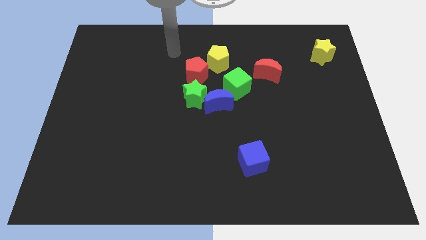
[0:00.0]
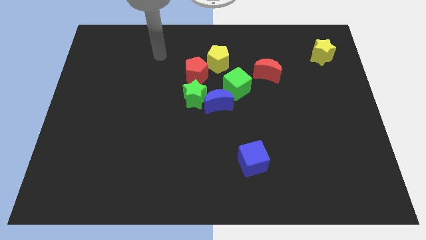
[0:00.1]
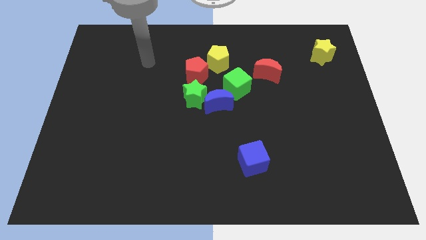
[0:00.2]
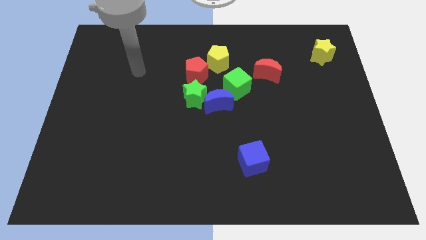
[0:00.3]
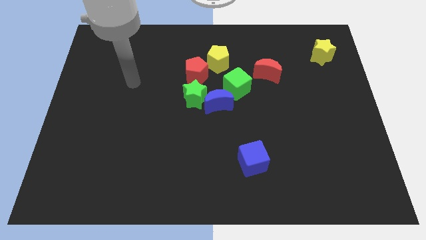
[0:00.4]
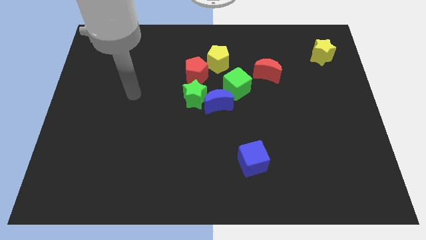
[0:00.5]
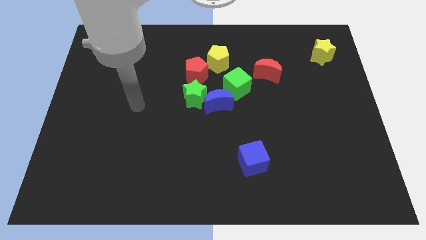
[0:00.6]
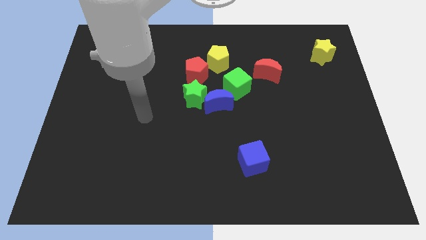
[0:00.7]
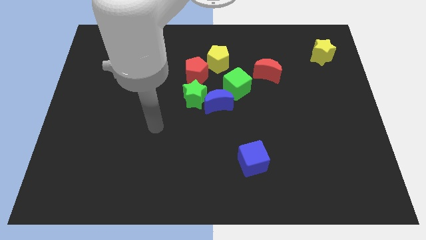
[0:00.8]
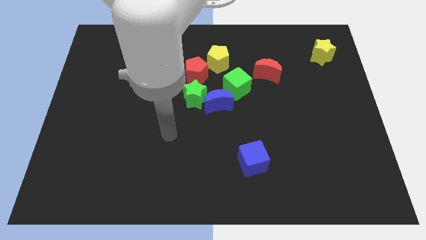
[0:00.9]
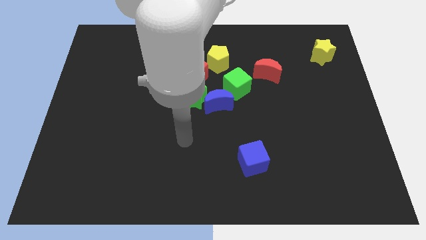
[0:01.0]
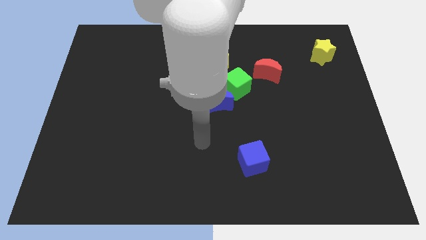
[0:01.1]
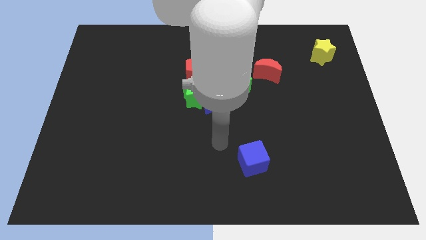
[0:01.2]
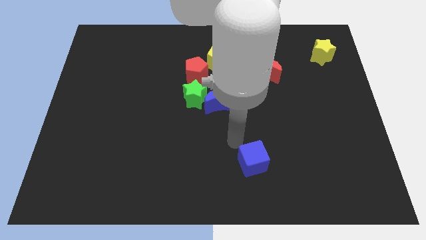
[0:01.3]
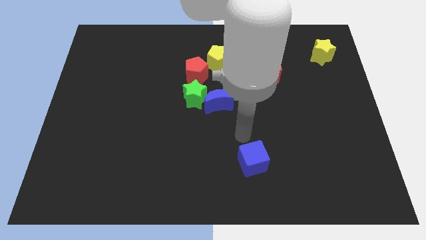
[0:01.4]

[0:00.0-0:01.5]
push your arm in between the blue moon and blue cube

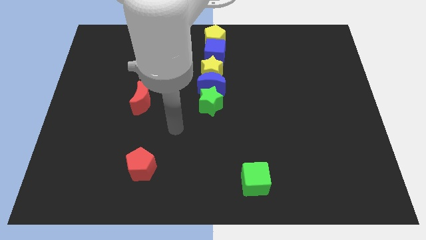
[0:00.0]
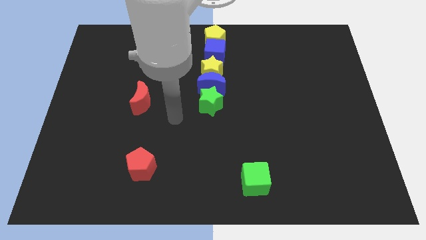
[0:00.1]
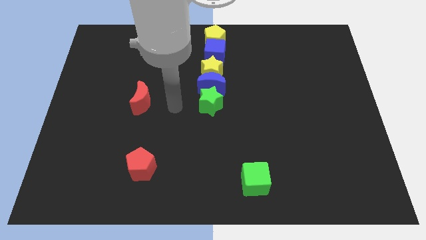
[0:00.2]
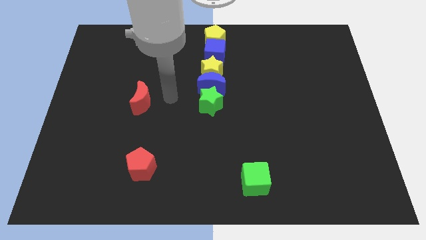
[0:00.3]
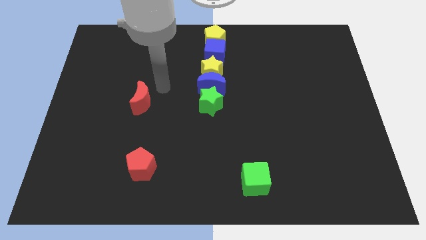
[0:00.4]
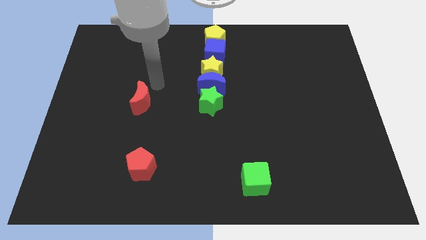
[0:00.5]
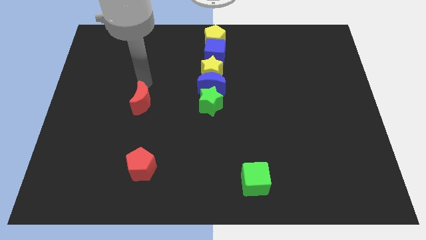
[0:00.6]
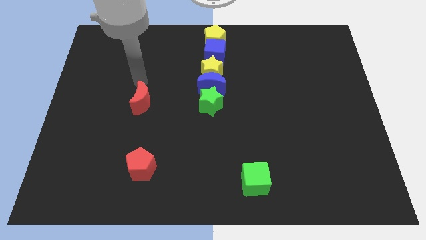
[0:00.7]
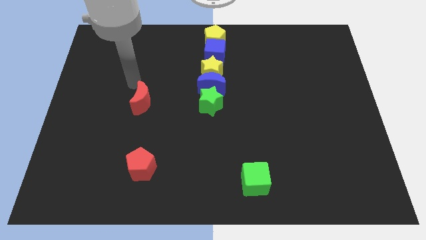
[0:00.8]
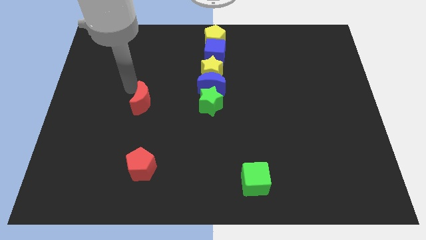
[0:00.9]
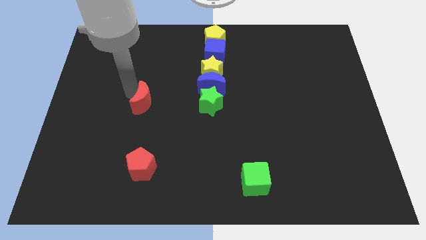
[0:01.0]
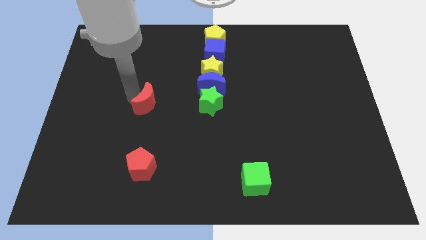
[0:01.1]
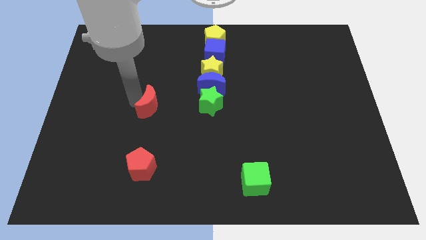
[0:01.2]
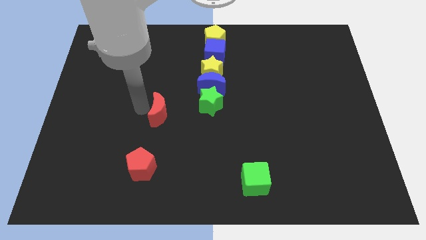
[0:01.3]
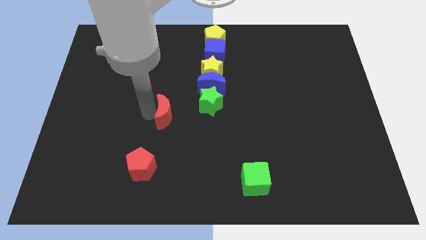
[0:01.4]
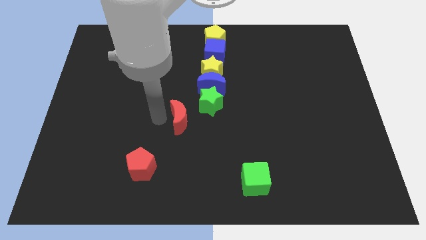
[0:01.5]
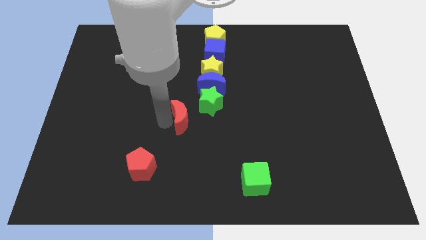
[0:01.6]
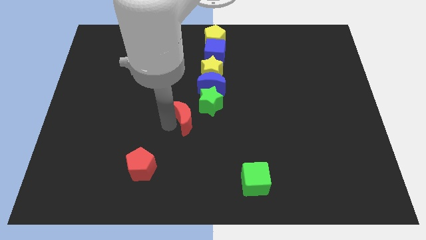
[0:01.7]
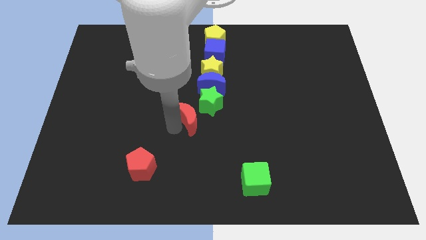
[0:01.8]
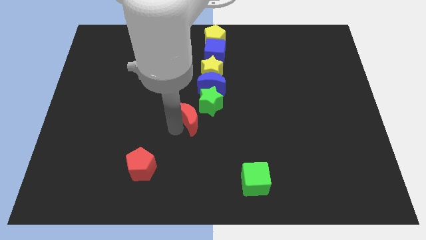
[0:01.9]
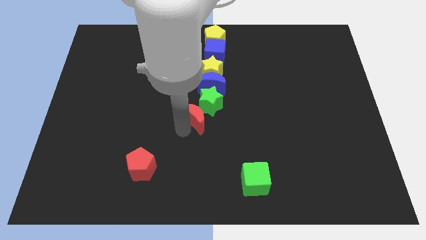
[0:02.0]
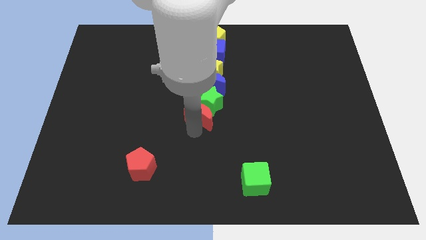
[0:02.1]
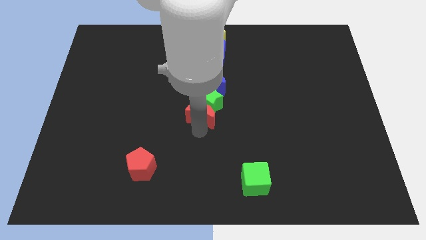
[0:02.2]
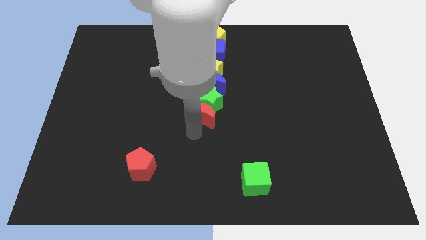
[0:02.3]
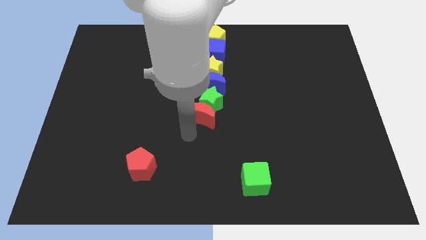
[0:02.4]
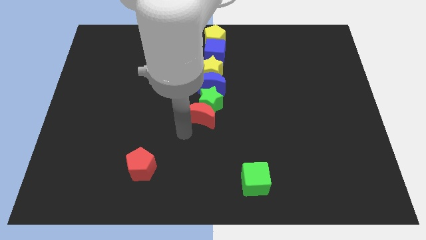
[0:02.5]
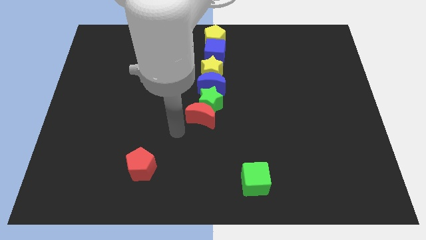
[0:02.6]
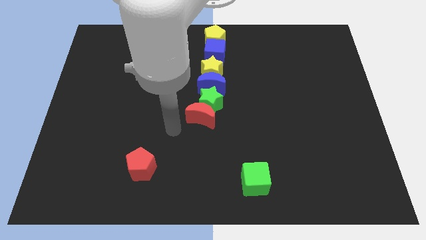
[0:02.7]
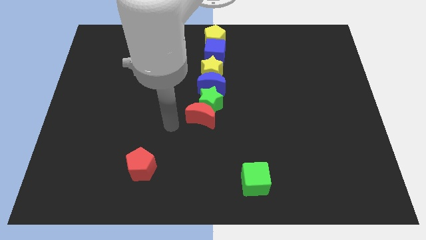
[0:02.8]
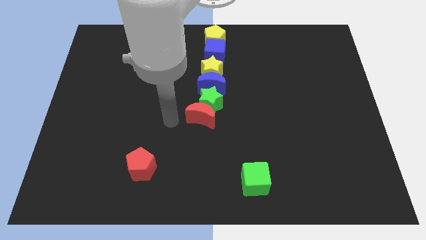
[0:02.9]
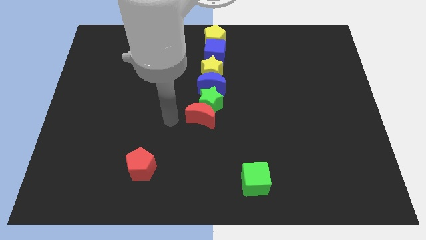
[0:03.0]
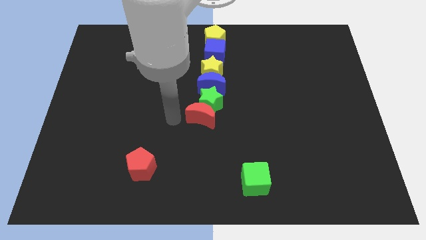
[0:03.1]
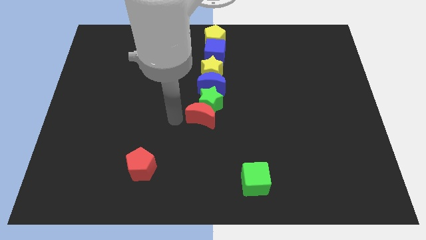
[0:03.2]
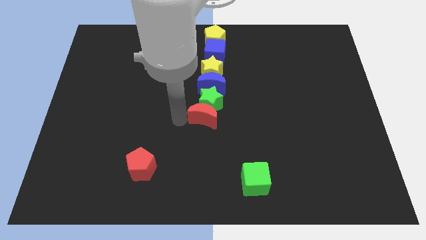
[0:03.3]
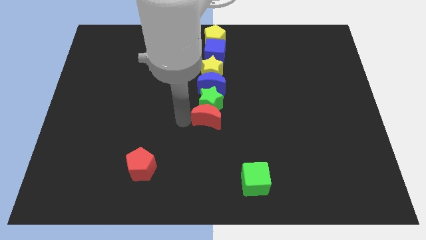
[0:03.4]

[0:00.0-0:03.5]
drag the red moon and place it below the green star

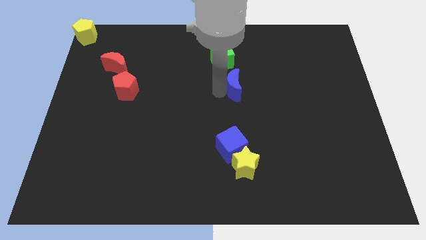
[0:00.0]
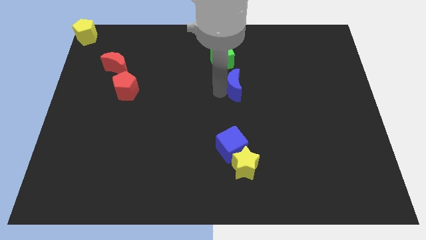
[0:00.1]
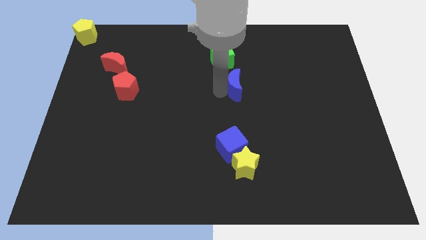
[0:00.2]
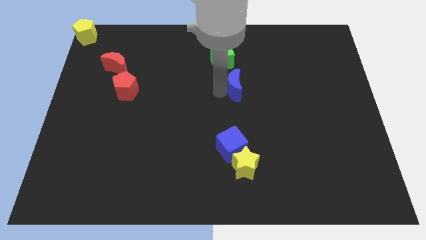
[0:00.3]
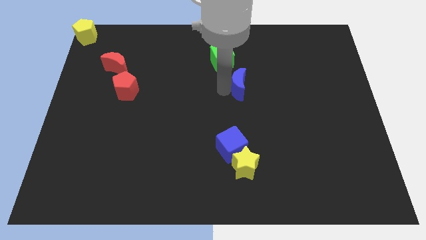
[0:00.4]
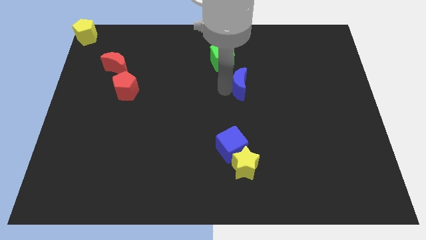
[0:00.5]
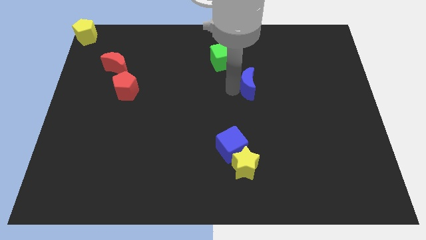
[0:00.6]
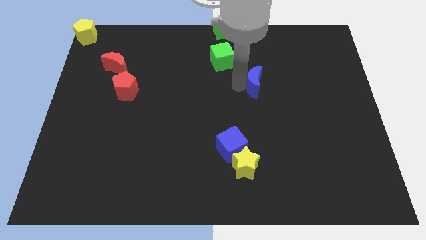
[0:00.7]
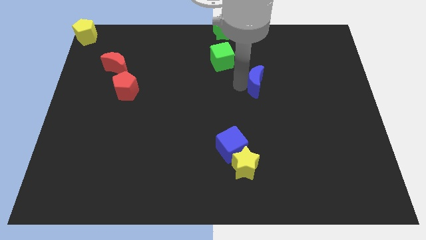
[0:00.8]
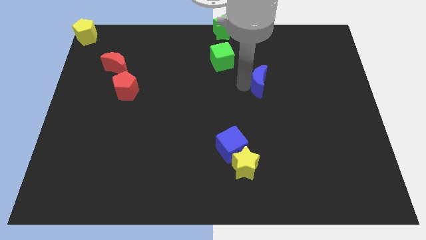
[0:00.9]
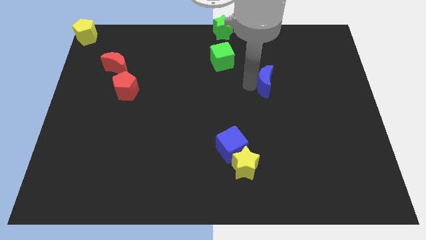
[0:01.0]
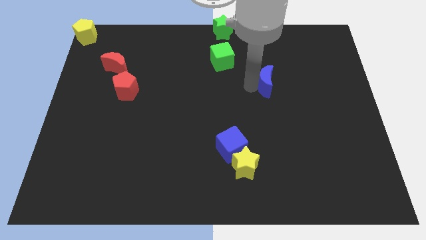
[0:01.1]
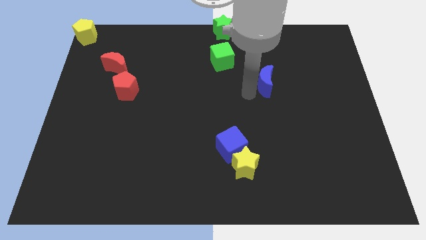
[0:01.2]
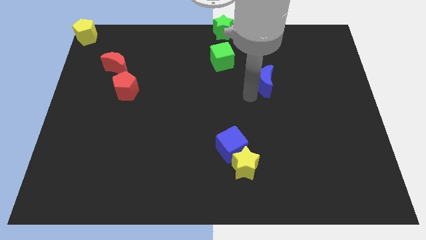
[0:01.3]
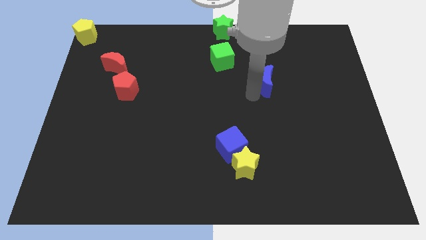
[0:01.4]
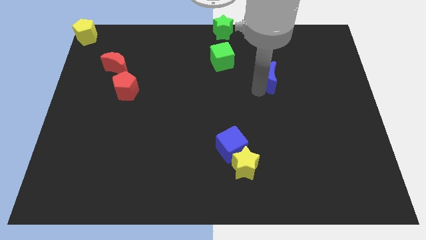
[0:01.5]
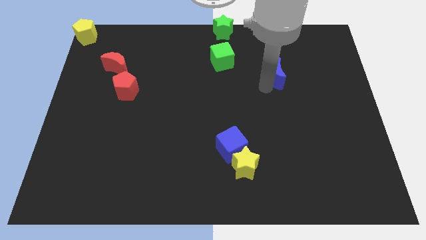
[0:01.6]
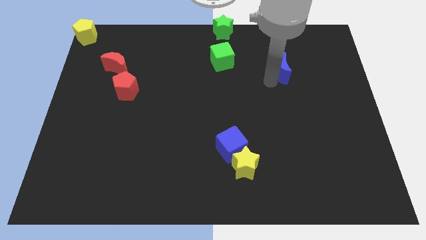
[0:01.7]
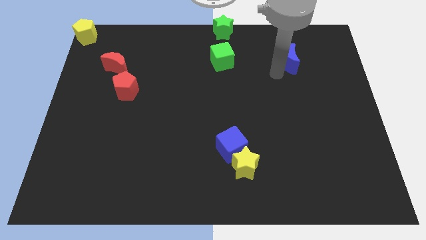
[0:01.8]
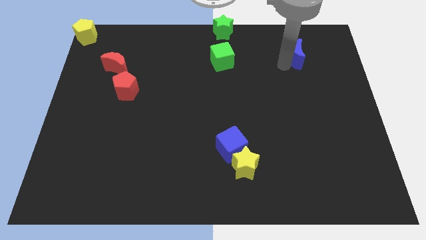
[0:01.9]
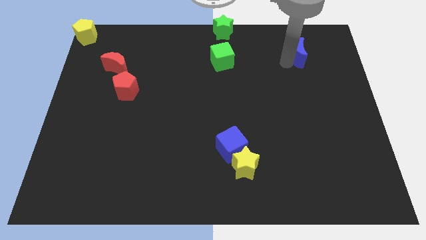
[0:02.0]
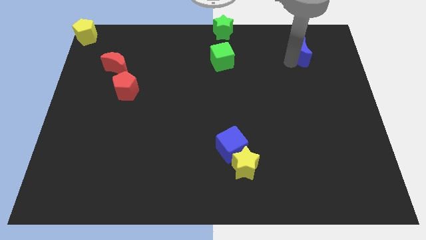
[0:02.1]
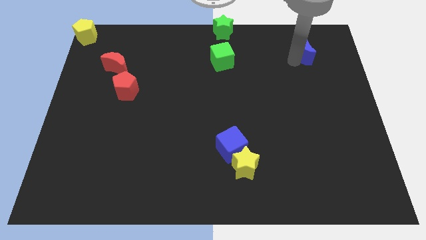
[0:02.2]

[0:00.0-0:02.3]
move the blue crescent towards the top right side of the board

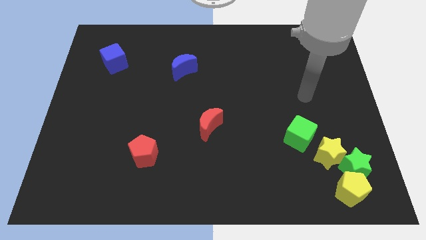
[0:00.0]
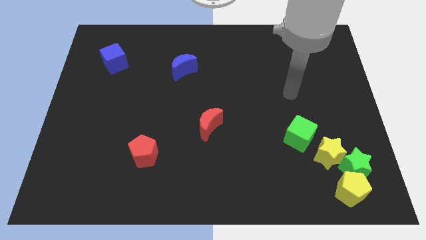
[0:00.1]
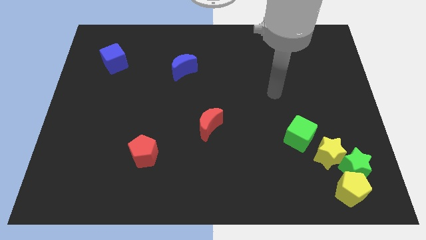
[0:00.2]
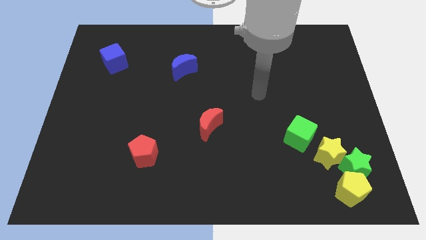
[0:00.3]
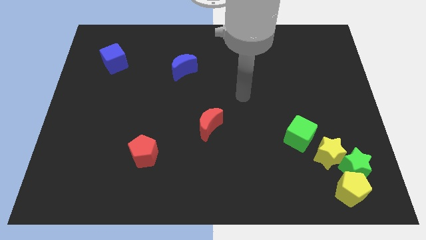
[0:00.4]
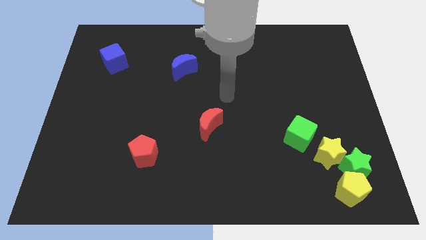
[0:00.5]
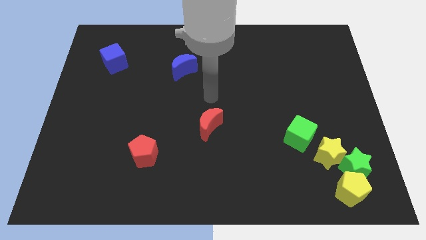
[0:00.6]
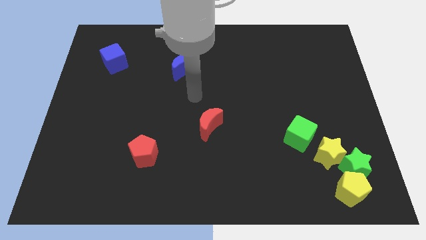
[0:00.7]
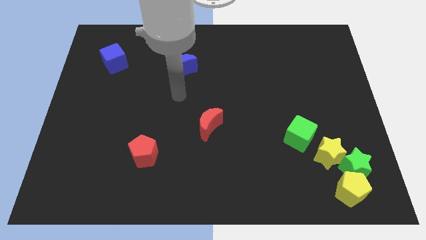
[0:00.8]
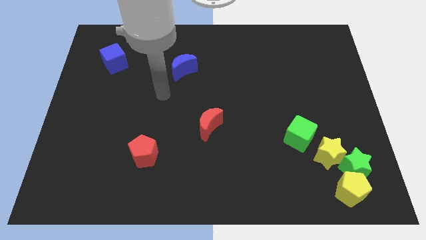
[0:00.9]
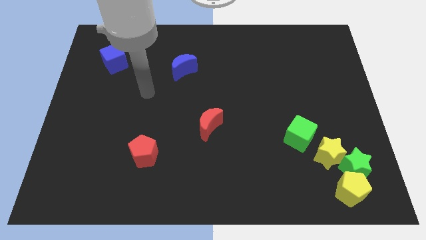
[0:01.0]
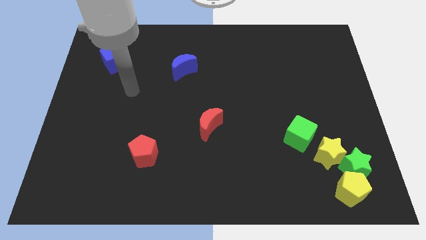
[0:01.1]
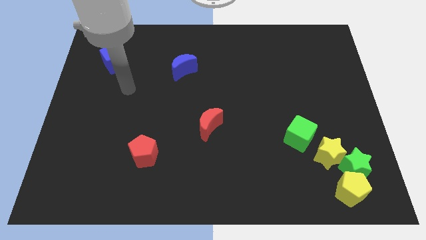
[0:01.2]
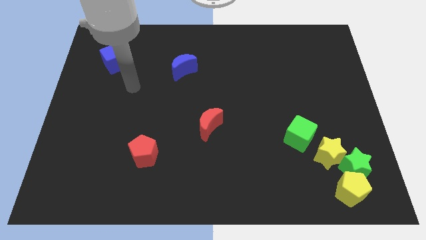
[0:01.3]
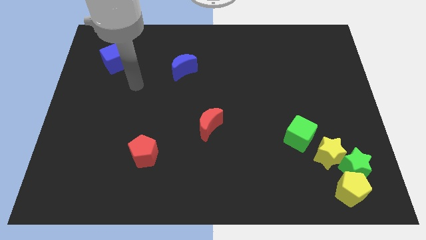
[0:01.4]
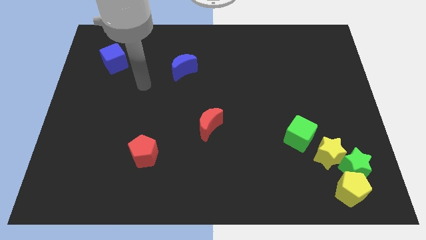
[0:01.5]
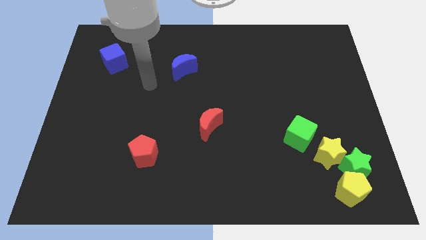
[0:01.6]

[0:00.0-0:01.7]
place your arm diagonally bottom right to the blue cube
